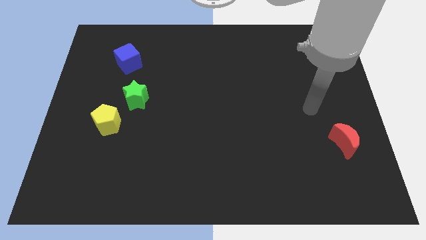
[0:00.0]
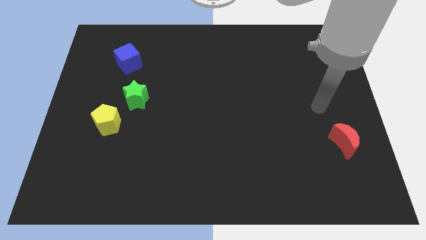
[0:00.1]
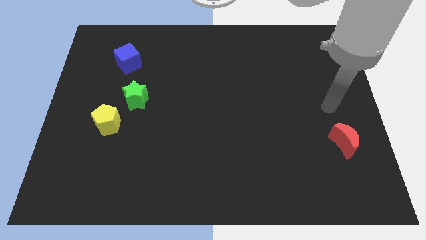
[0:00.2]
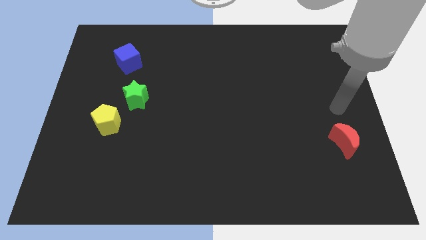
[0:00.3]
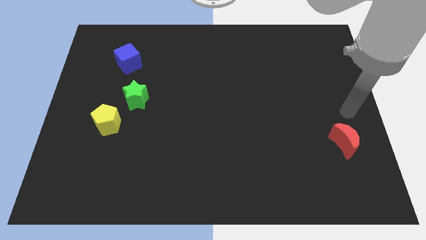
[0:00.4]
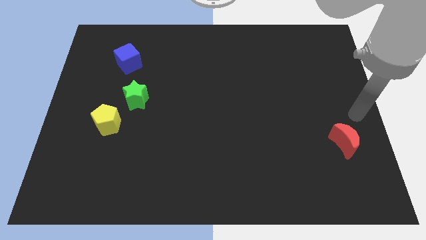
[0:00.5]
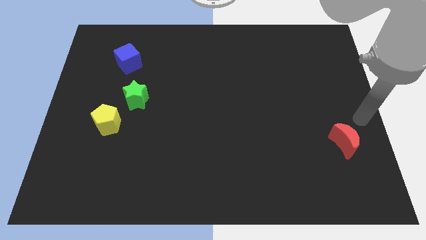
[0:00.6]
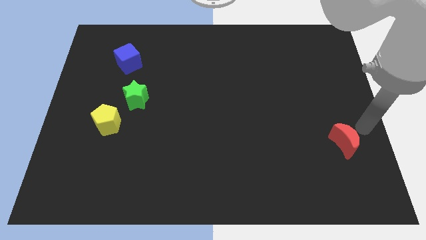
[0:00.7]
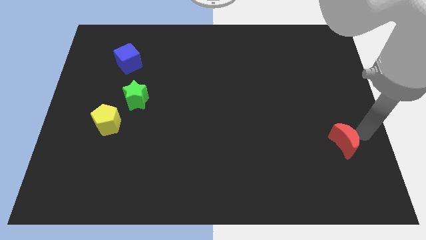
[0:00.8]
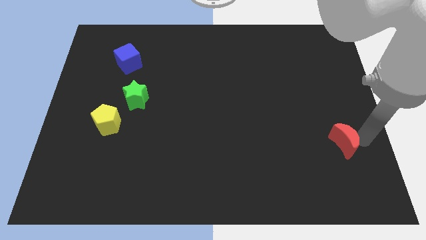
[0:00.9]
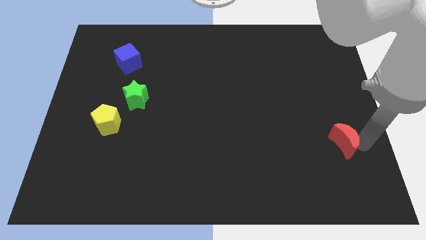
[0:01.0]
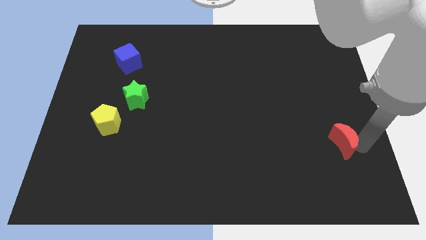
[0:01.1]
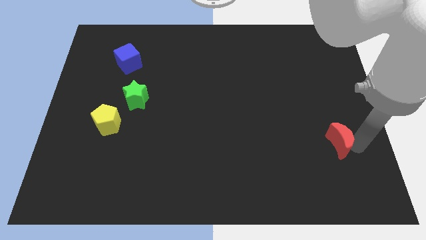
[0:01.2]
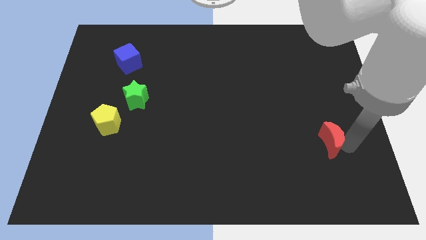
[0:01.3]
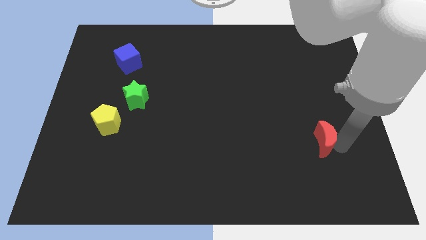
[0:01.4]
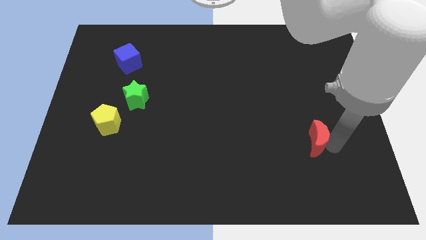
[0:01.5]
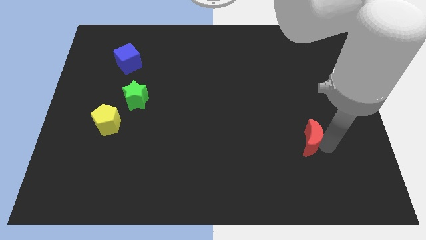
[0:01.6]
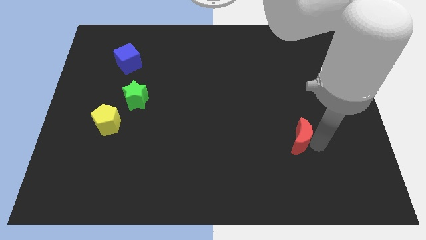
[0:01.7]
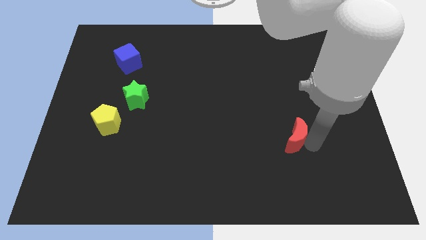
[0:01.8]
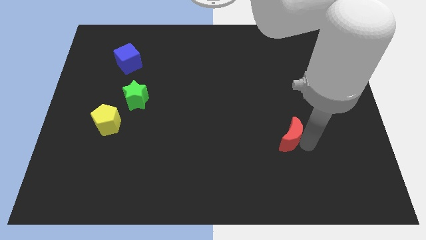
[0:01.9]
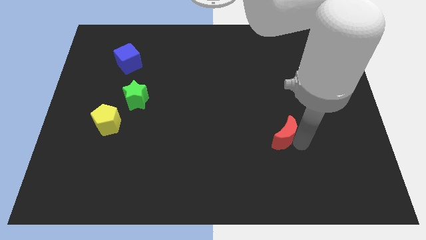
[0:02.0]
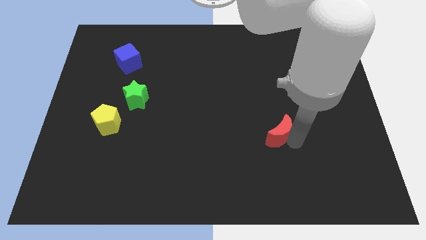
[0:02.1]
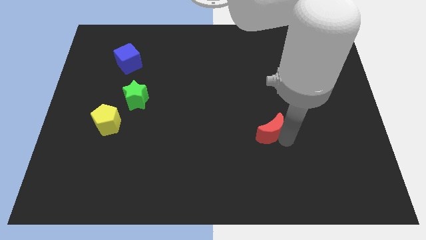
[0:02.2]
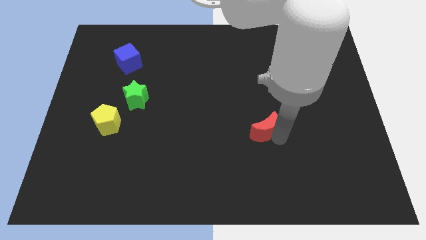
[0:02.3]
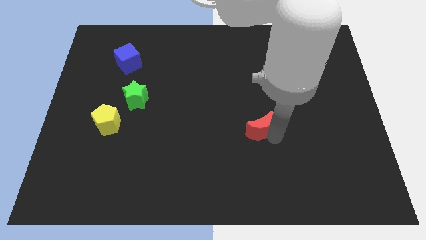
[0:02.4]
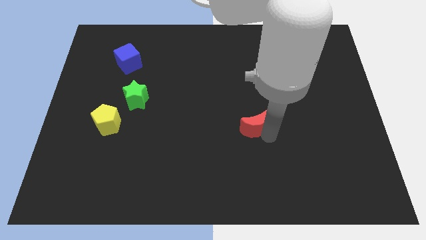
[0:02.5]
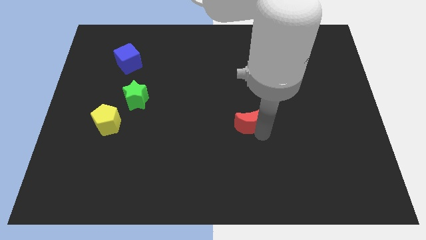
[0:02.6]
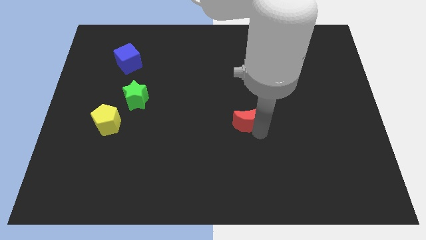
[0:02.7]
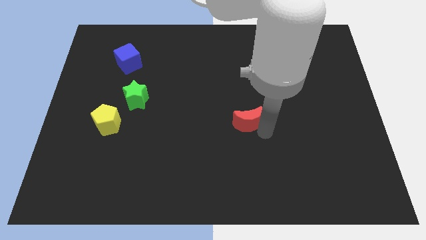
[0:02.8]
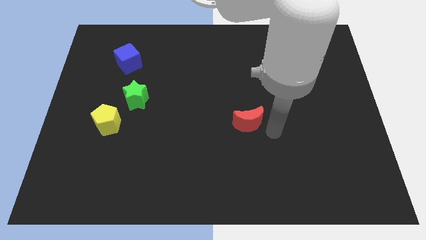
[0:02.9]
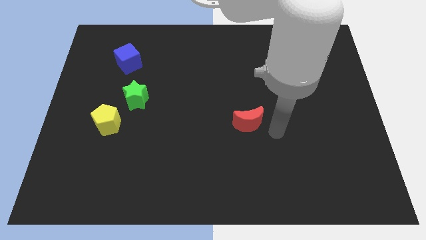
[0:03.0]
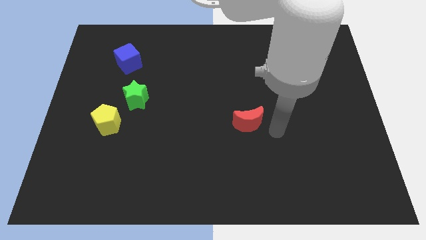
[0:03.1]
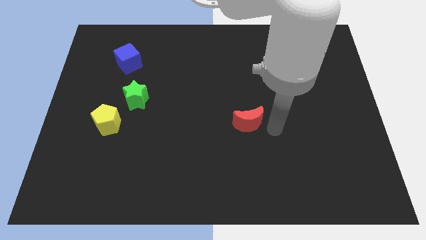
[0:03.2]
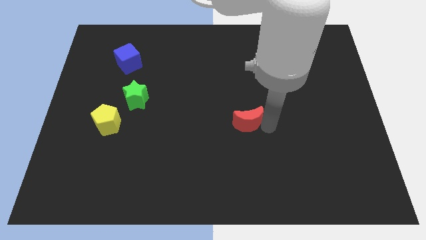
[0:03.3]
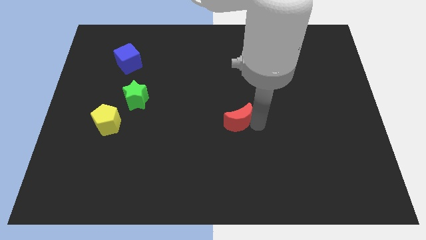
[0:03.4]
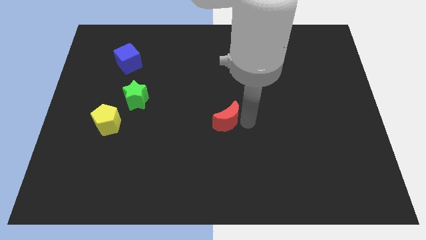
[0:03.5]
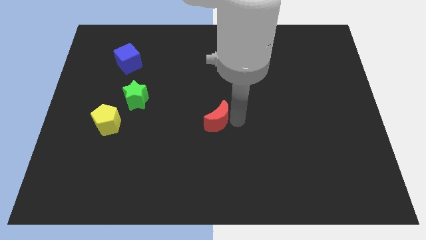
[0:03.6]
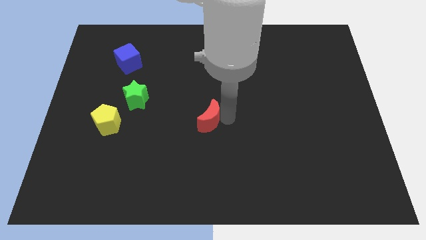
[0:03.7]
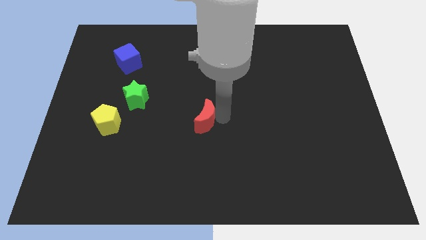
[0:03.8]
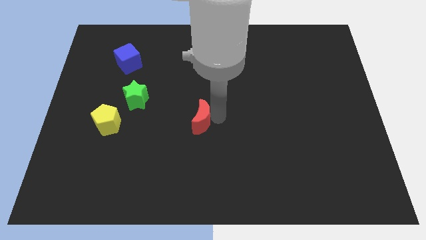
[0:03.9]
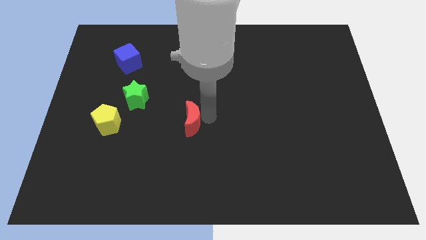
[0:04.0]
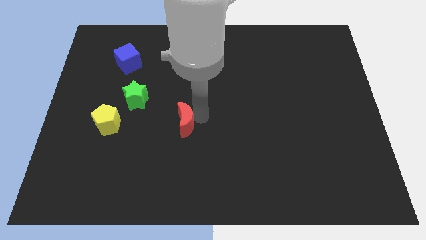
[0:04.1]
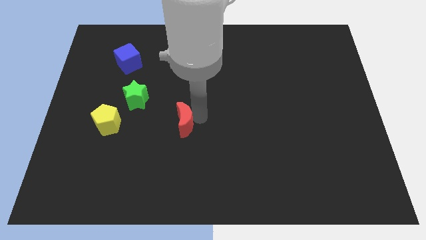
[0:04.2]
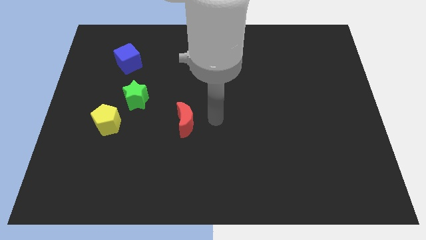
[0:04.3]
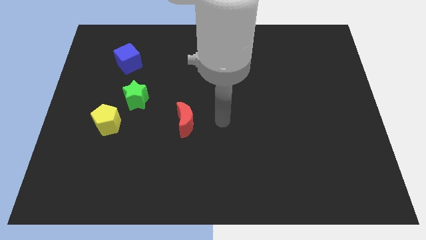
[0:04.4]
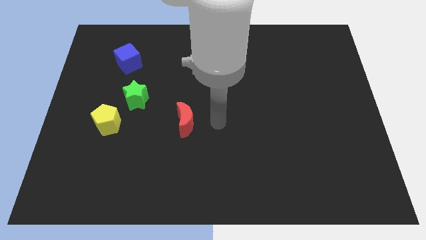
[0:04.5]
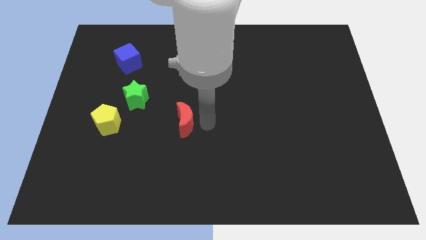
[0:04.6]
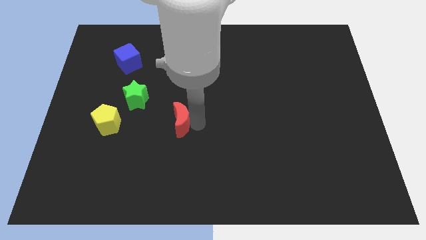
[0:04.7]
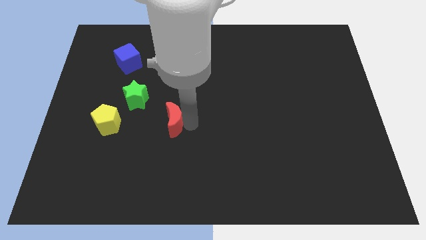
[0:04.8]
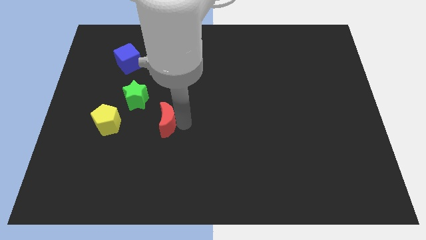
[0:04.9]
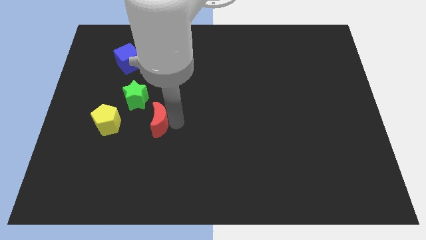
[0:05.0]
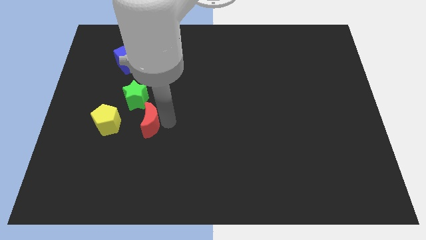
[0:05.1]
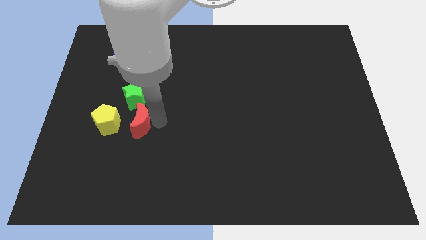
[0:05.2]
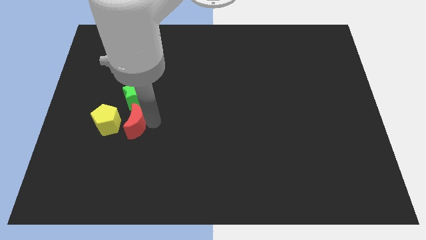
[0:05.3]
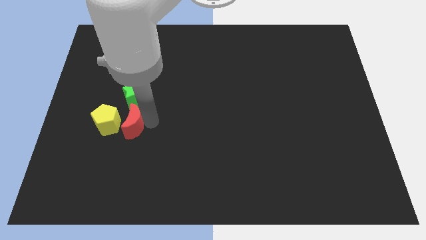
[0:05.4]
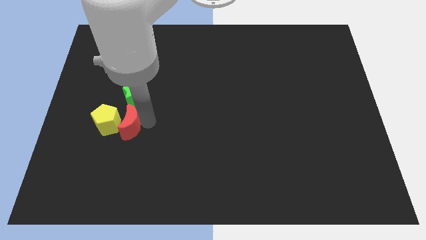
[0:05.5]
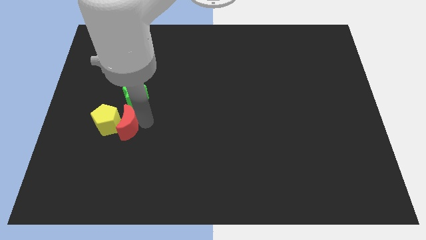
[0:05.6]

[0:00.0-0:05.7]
move the red block towards the pentagon

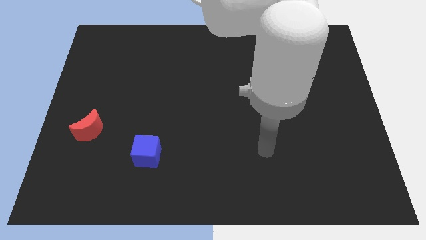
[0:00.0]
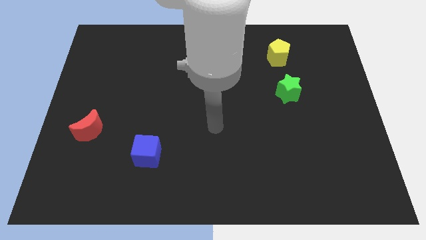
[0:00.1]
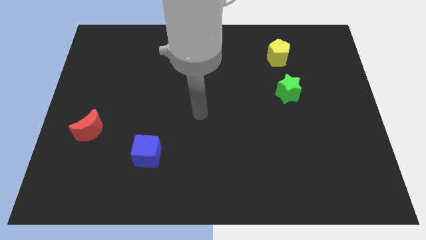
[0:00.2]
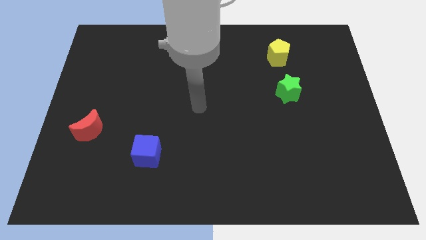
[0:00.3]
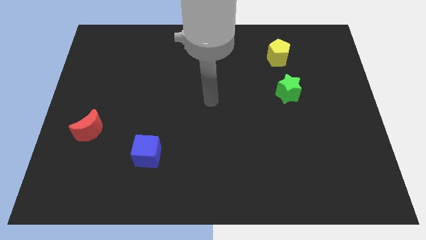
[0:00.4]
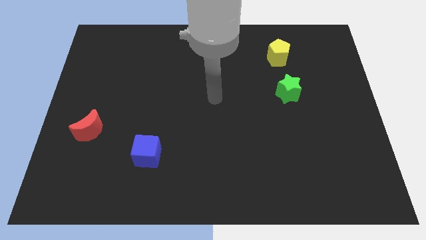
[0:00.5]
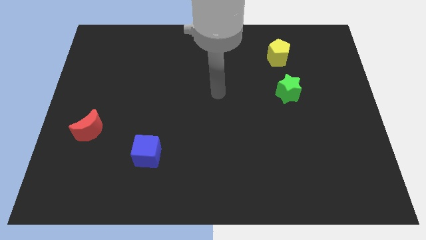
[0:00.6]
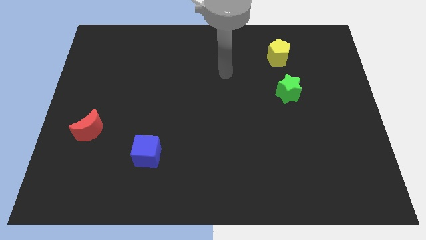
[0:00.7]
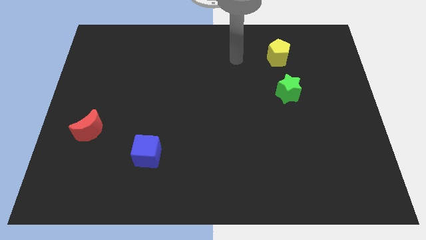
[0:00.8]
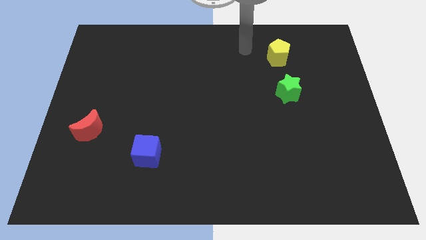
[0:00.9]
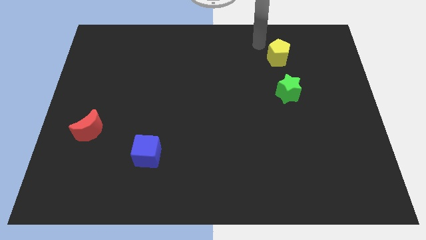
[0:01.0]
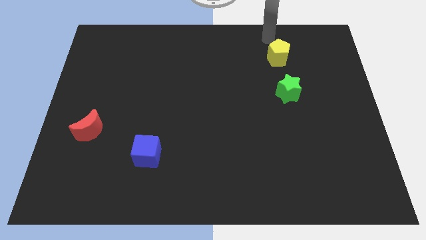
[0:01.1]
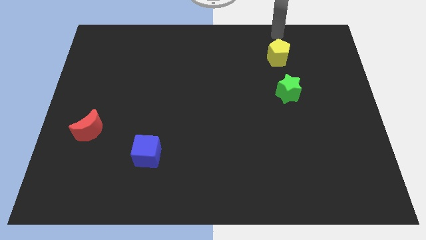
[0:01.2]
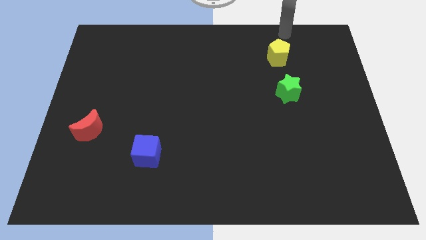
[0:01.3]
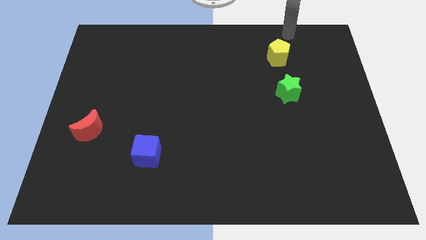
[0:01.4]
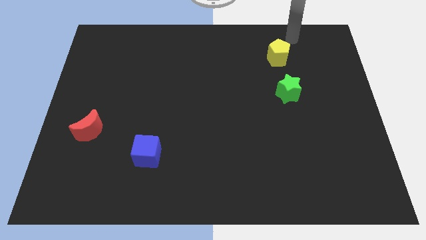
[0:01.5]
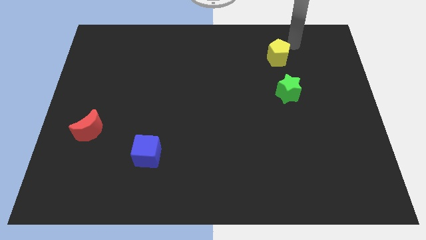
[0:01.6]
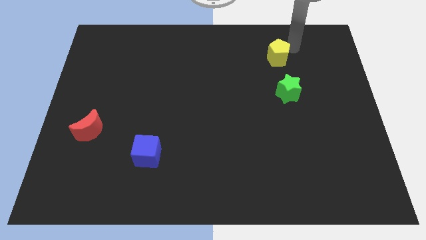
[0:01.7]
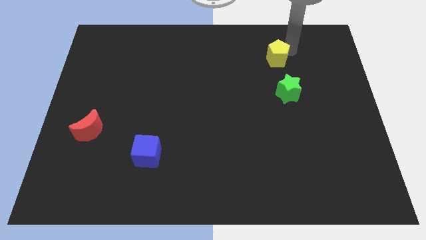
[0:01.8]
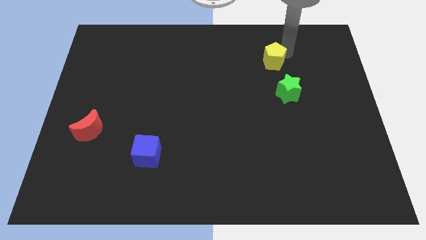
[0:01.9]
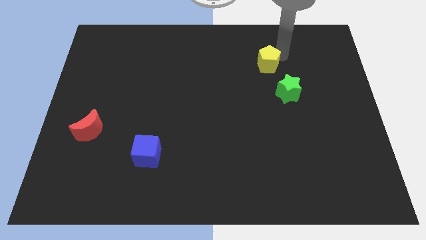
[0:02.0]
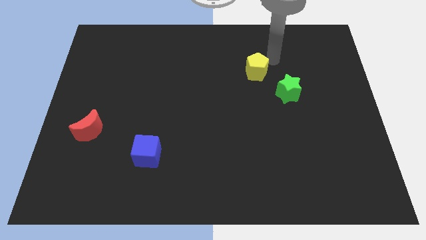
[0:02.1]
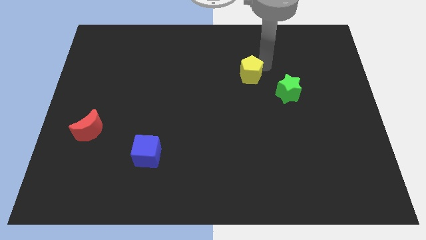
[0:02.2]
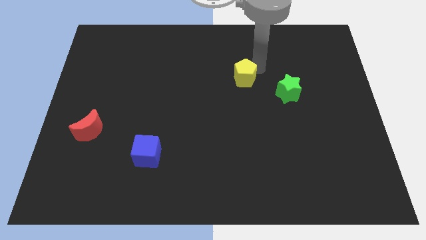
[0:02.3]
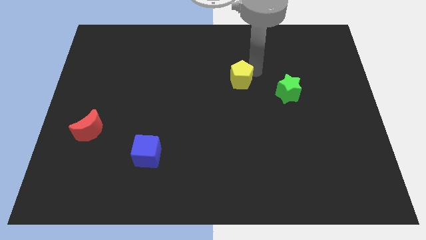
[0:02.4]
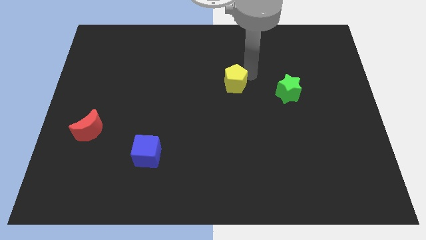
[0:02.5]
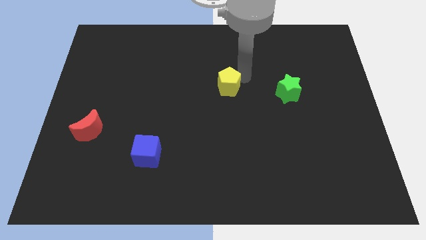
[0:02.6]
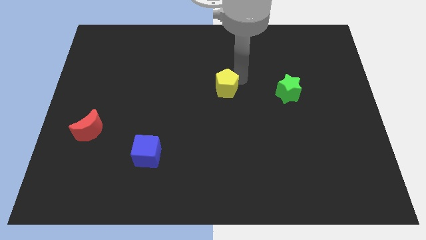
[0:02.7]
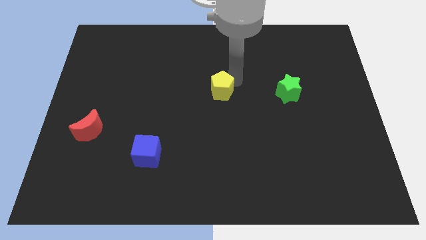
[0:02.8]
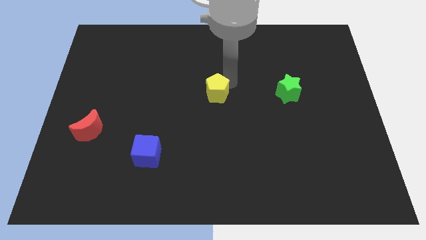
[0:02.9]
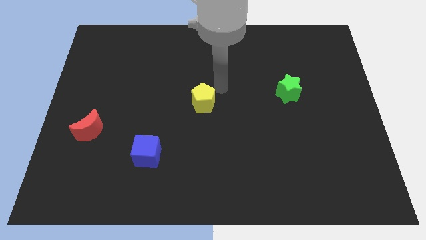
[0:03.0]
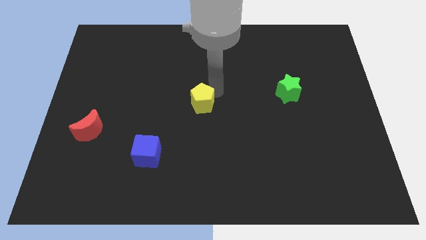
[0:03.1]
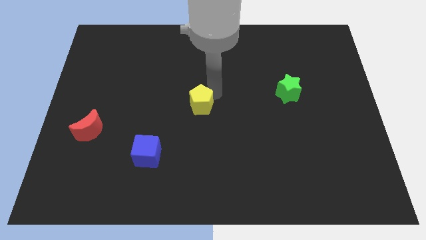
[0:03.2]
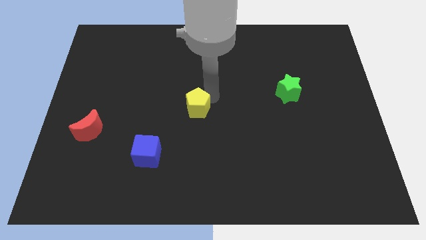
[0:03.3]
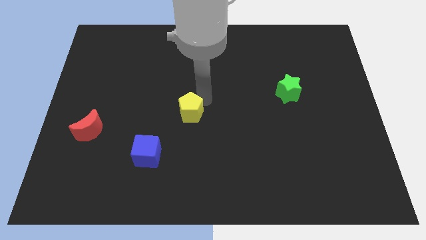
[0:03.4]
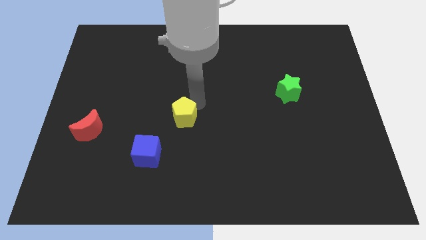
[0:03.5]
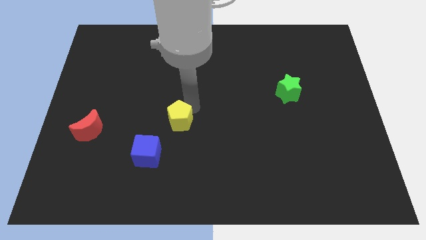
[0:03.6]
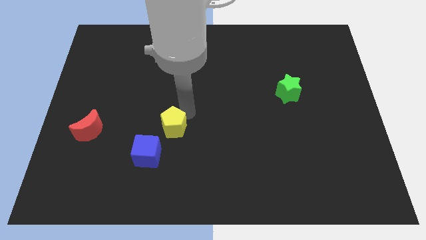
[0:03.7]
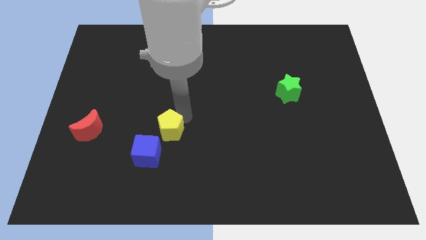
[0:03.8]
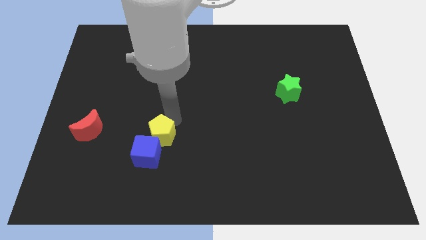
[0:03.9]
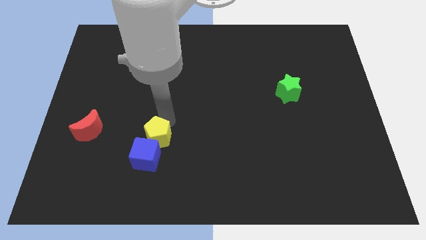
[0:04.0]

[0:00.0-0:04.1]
slide the pentagon close to the blue block
